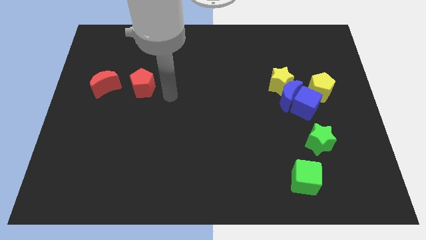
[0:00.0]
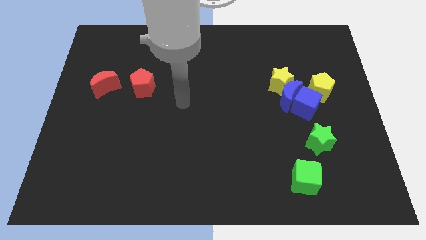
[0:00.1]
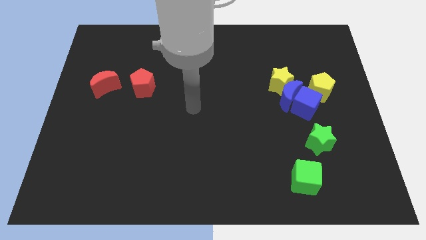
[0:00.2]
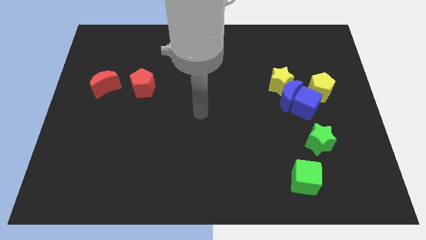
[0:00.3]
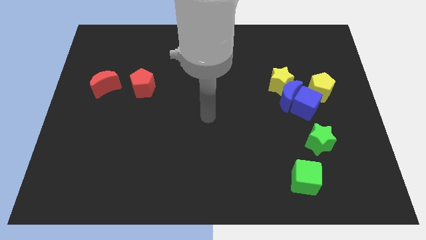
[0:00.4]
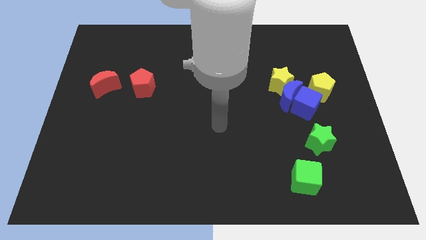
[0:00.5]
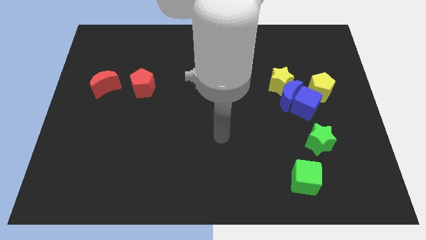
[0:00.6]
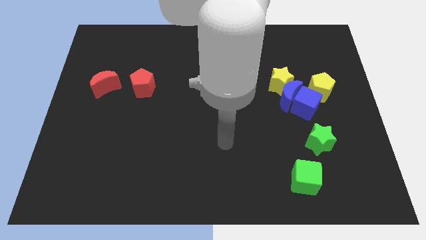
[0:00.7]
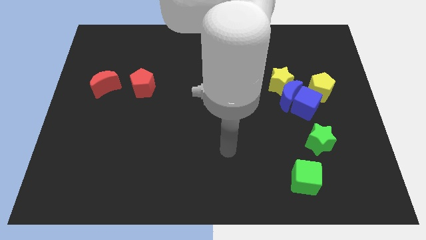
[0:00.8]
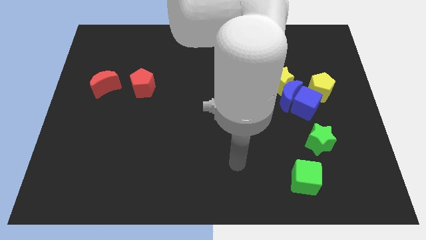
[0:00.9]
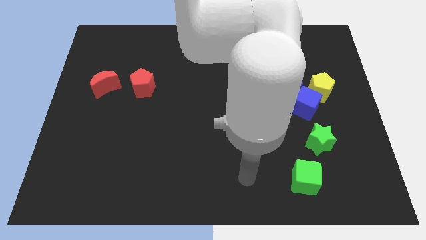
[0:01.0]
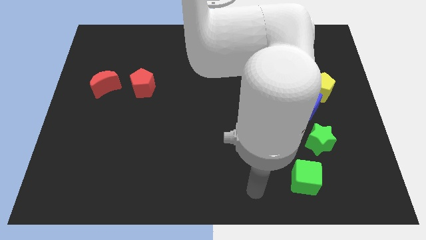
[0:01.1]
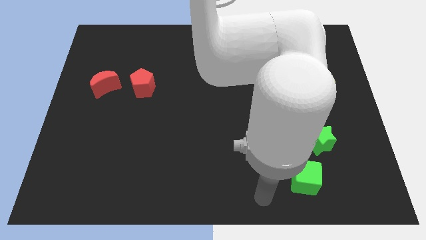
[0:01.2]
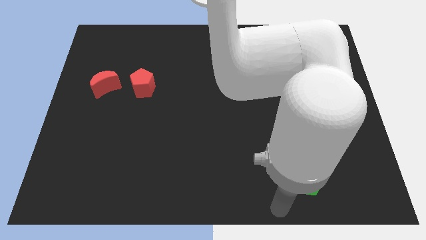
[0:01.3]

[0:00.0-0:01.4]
move the arm away from the red pentagon

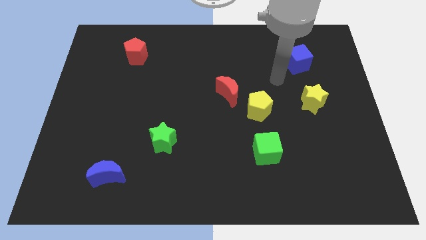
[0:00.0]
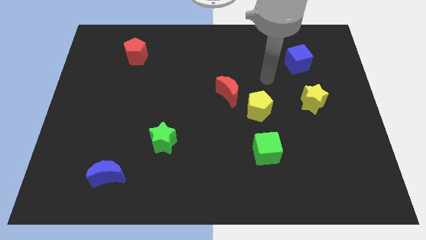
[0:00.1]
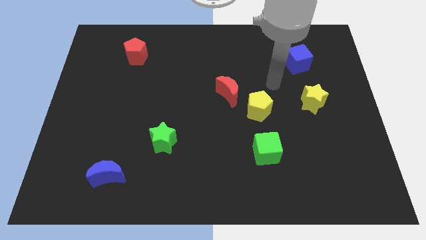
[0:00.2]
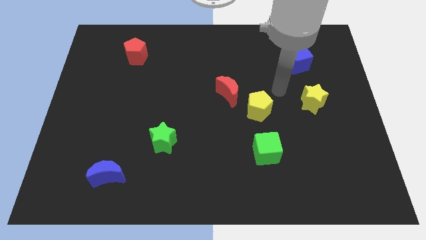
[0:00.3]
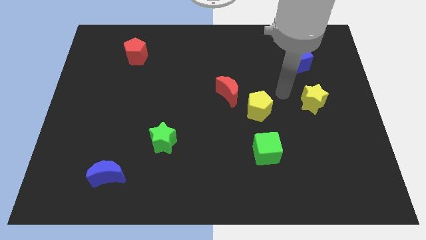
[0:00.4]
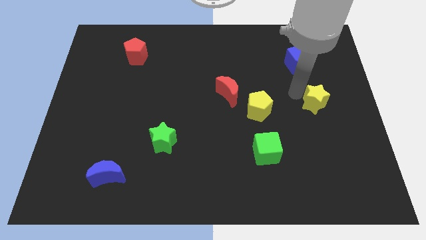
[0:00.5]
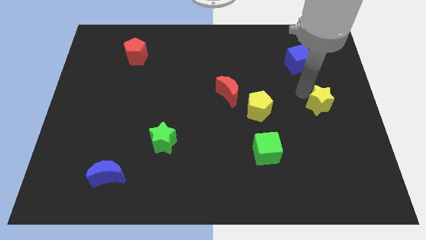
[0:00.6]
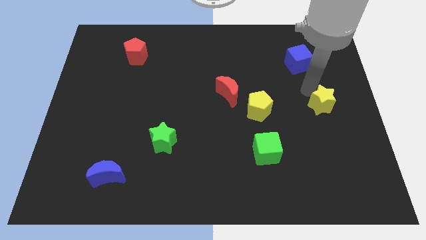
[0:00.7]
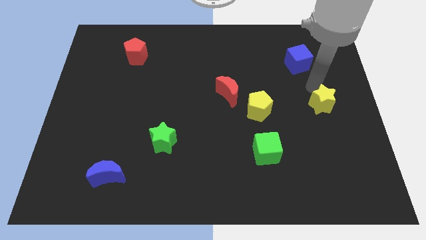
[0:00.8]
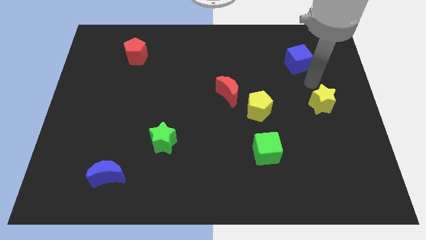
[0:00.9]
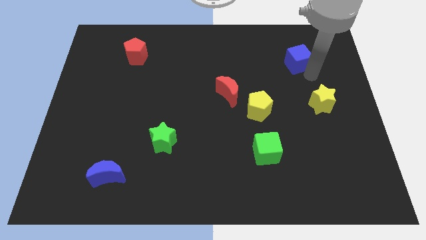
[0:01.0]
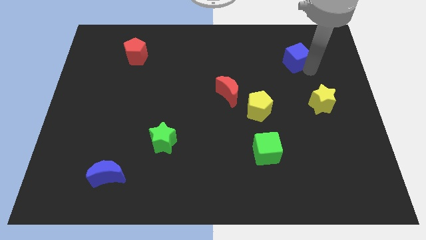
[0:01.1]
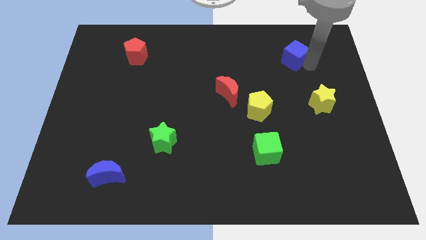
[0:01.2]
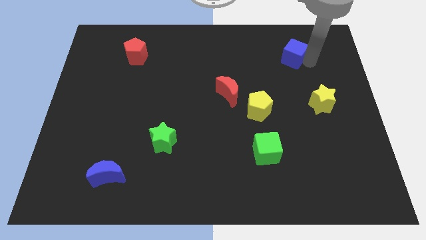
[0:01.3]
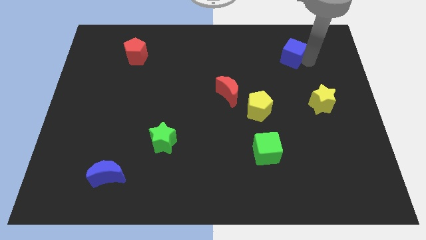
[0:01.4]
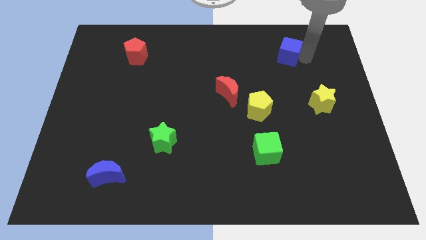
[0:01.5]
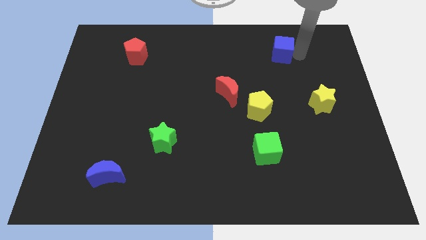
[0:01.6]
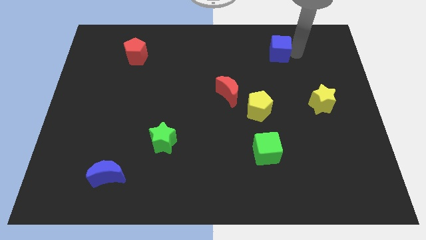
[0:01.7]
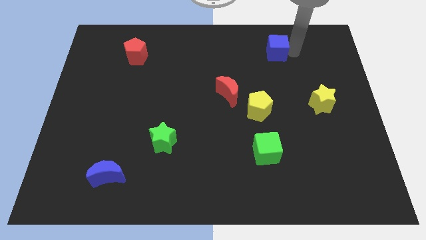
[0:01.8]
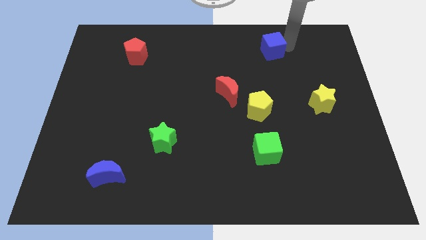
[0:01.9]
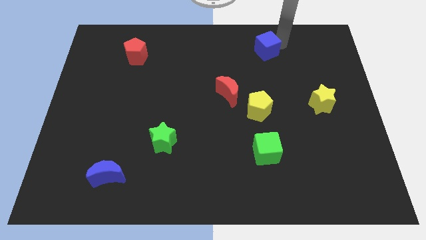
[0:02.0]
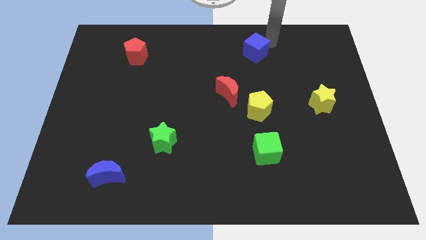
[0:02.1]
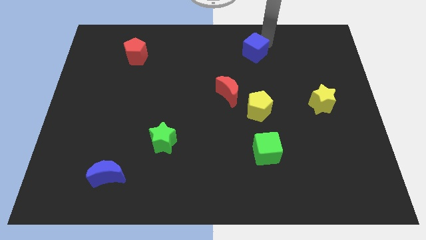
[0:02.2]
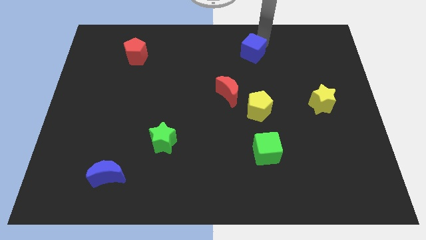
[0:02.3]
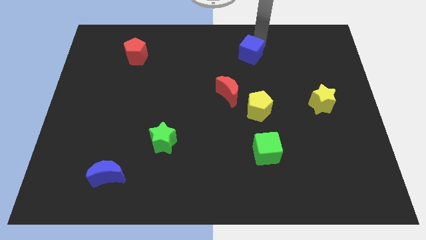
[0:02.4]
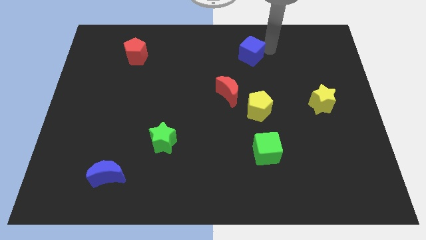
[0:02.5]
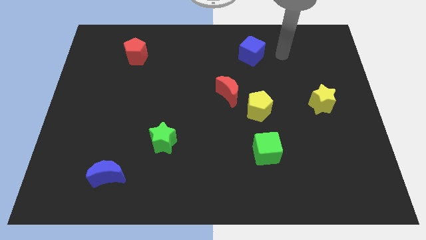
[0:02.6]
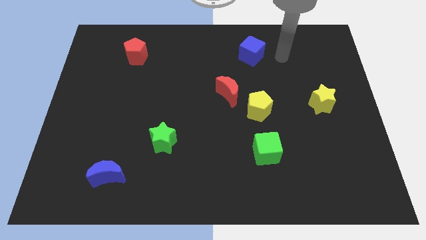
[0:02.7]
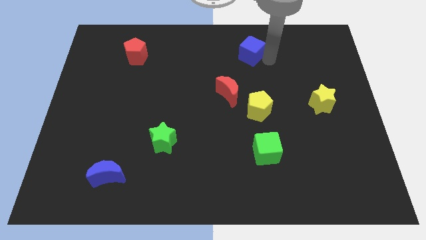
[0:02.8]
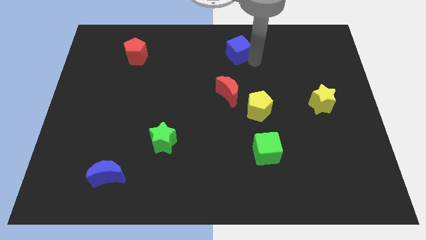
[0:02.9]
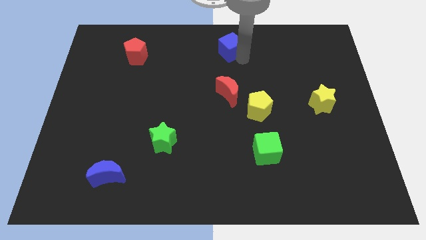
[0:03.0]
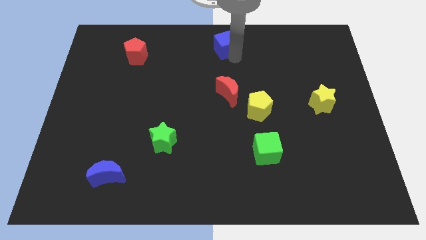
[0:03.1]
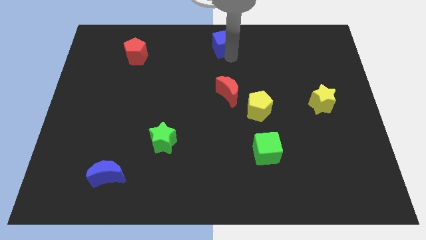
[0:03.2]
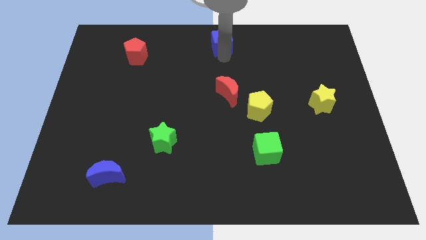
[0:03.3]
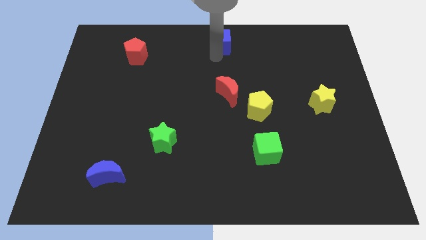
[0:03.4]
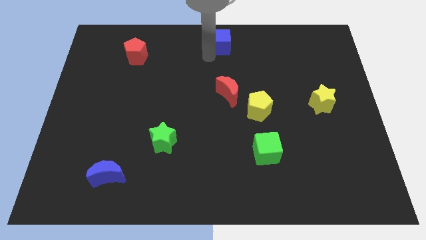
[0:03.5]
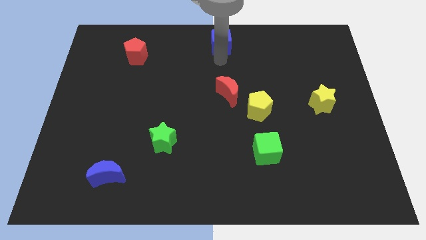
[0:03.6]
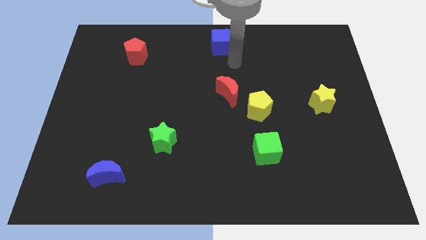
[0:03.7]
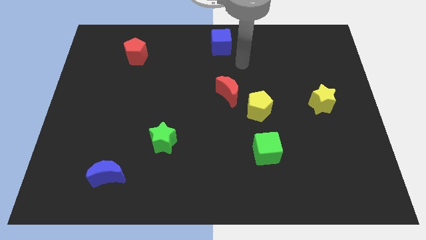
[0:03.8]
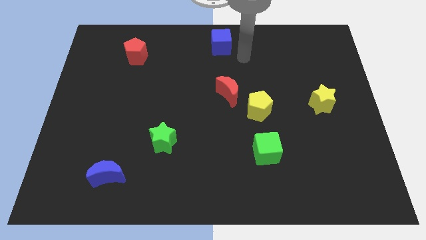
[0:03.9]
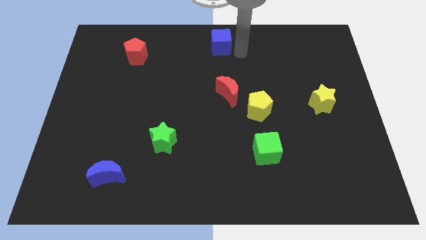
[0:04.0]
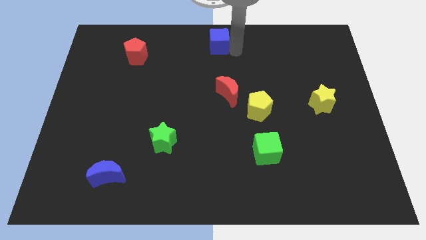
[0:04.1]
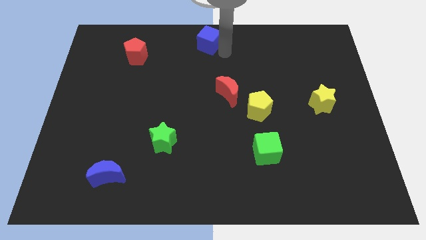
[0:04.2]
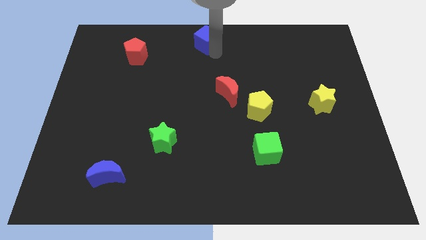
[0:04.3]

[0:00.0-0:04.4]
move blue cube to the top centre of the board

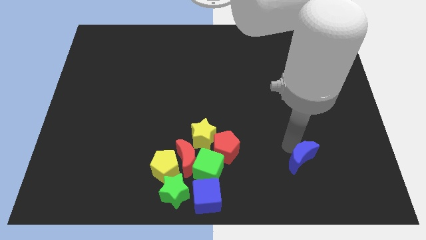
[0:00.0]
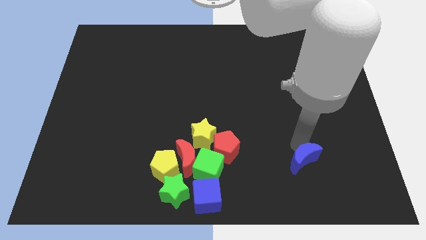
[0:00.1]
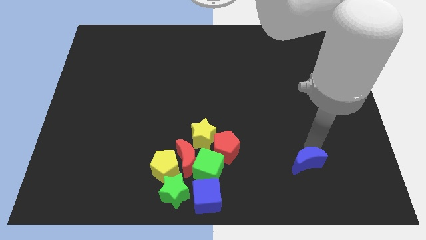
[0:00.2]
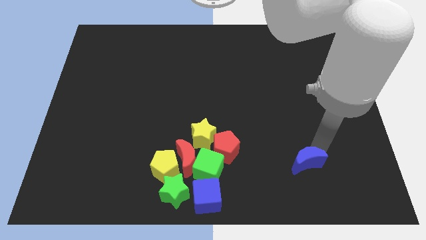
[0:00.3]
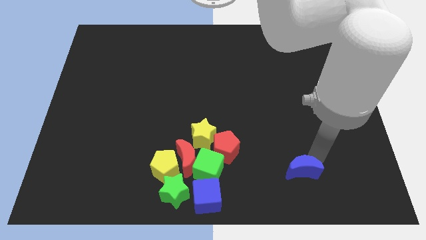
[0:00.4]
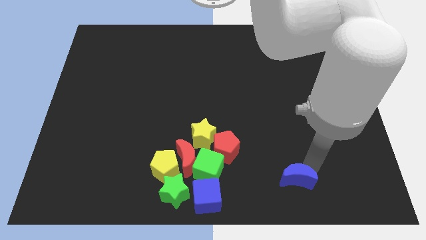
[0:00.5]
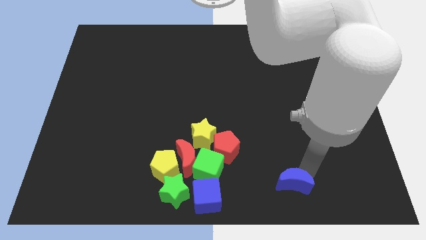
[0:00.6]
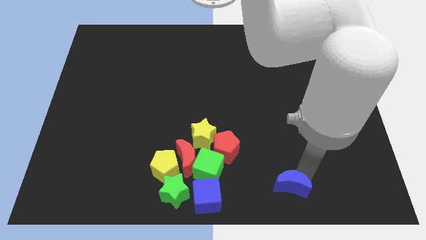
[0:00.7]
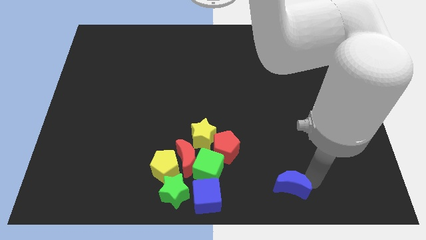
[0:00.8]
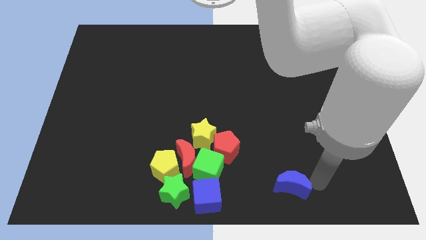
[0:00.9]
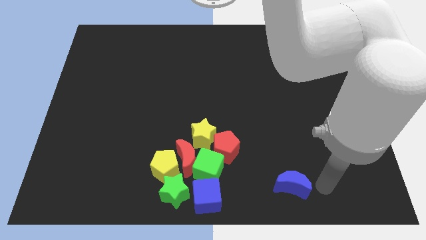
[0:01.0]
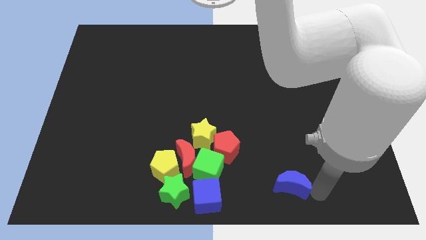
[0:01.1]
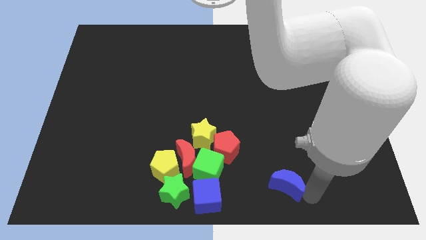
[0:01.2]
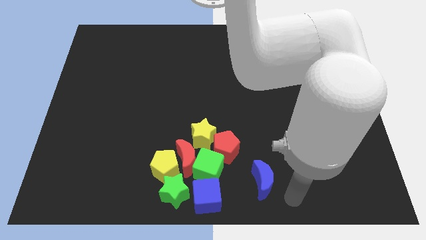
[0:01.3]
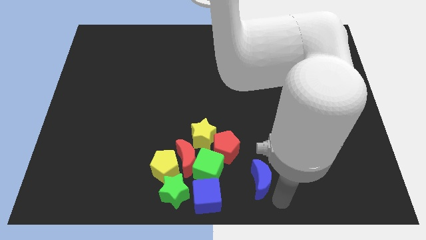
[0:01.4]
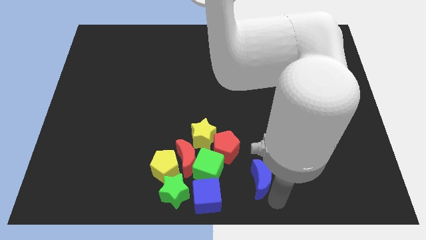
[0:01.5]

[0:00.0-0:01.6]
drag the blue moon to bottom right of red pentagon

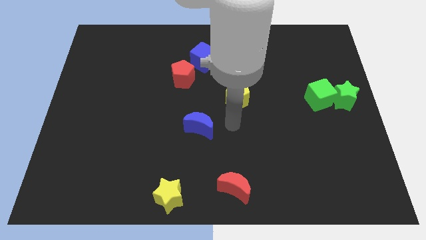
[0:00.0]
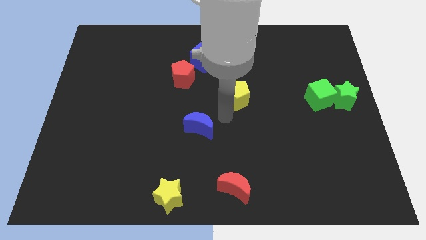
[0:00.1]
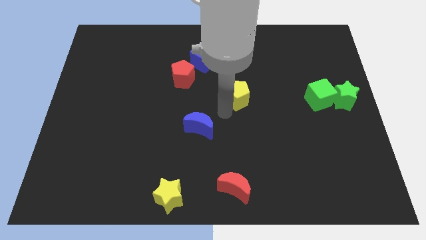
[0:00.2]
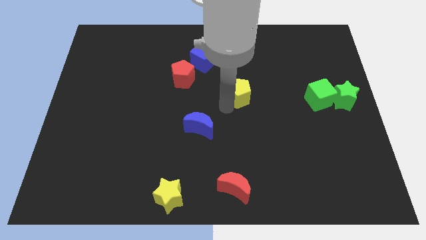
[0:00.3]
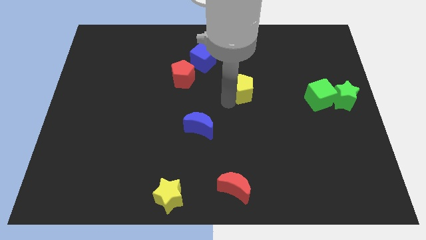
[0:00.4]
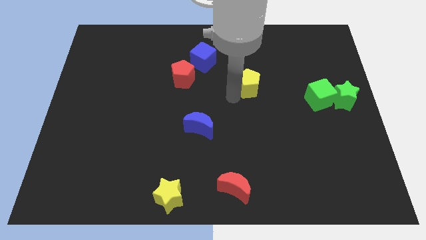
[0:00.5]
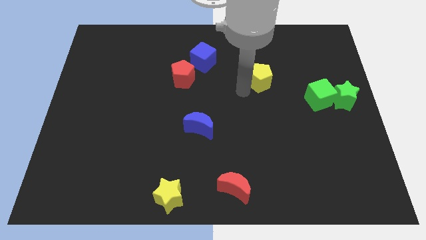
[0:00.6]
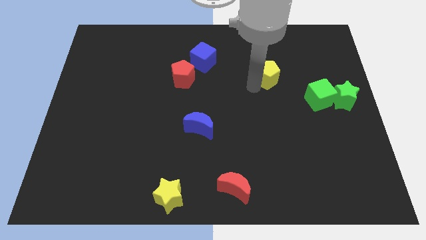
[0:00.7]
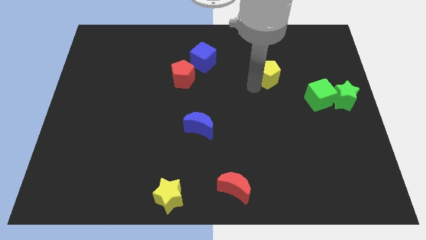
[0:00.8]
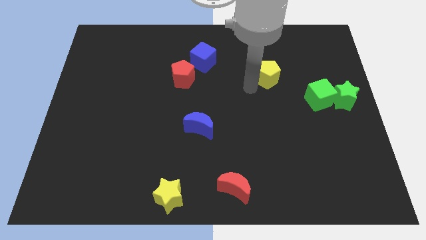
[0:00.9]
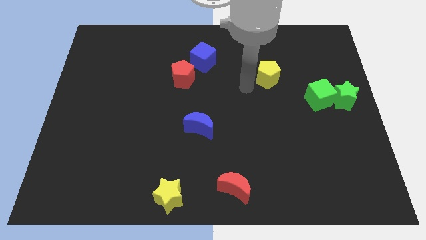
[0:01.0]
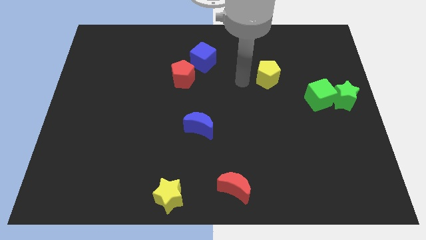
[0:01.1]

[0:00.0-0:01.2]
place the yellow pentagon right to the blue cube

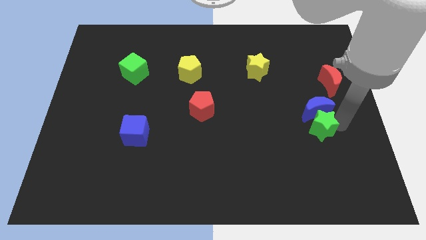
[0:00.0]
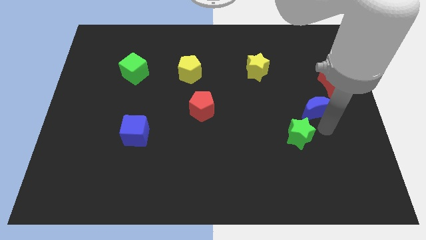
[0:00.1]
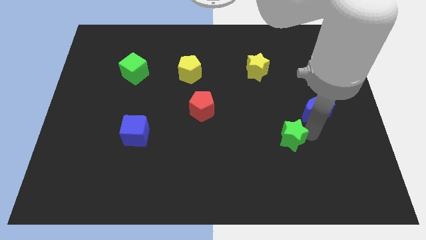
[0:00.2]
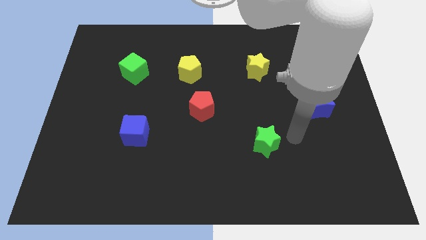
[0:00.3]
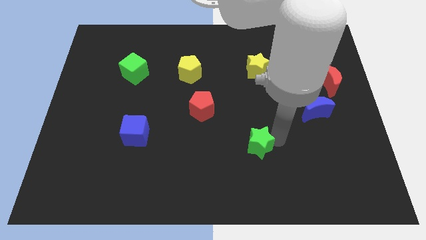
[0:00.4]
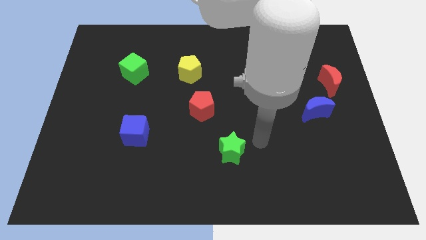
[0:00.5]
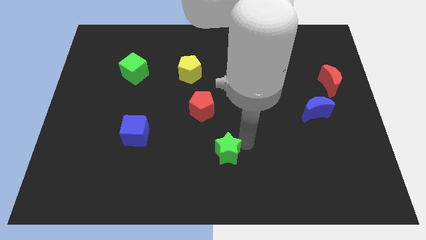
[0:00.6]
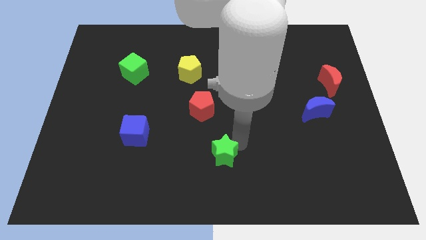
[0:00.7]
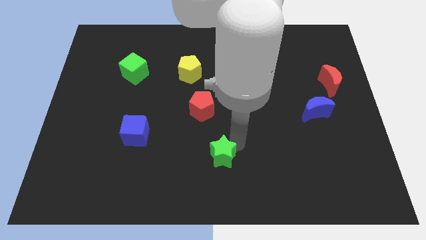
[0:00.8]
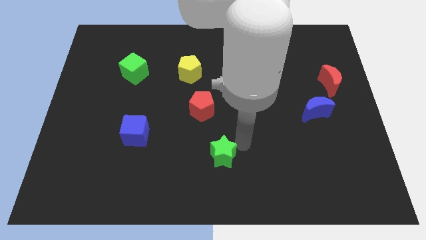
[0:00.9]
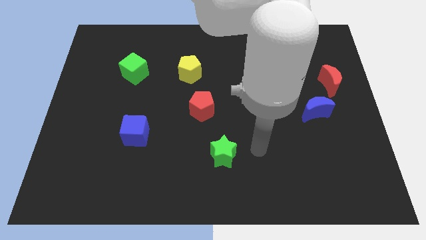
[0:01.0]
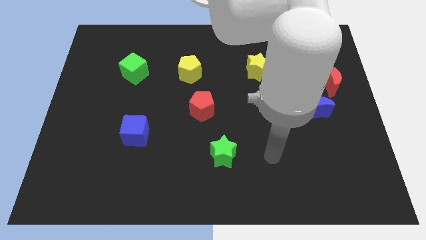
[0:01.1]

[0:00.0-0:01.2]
put the green star to the bottom center of the board
